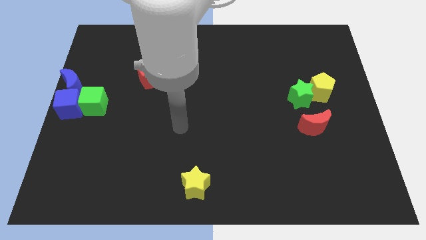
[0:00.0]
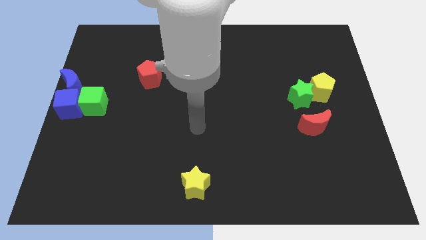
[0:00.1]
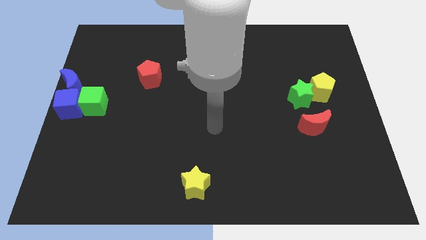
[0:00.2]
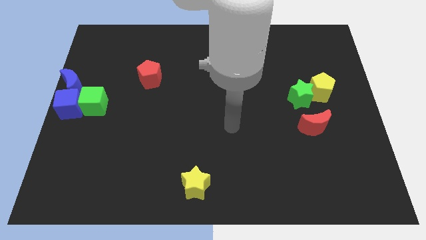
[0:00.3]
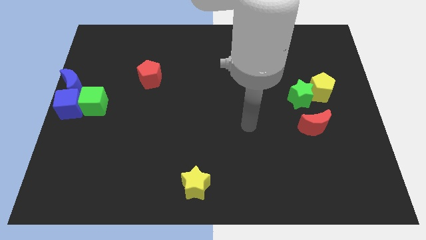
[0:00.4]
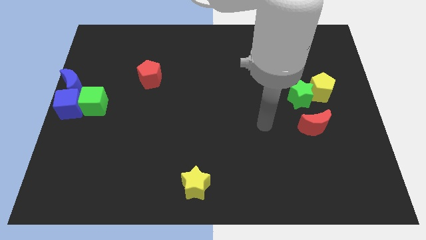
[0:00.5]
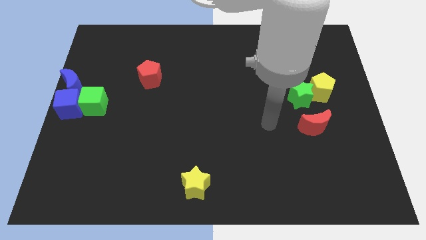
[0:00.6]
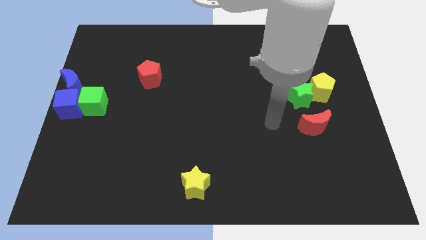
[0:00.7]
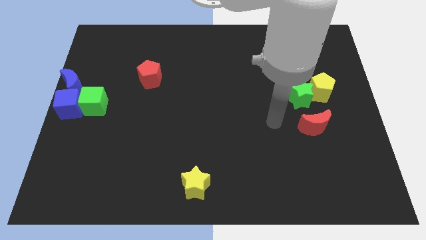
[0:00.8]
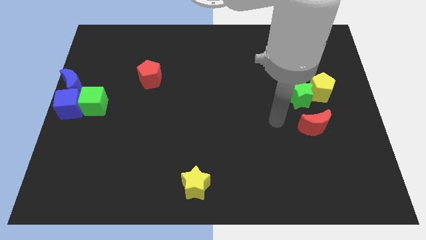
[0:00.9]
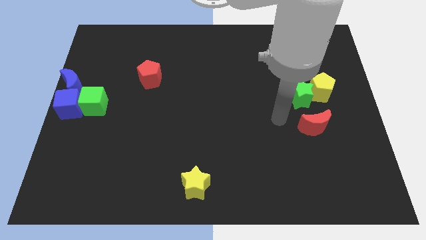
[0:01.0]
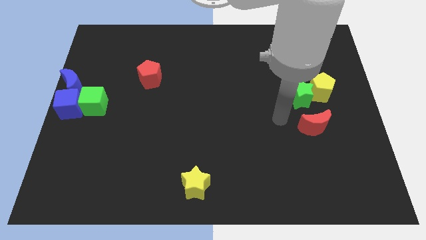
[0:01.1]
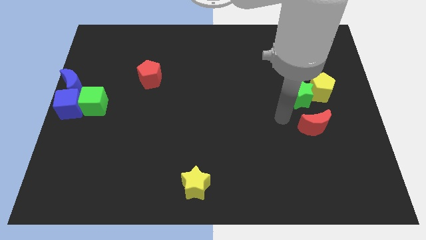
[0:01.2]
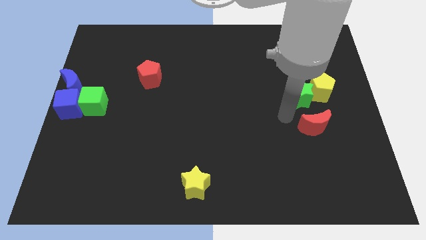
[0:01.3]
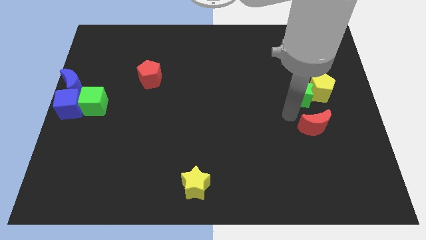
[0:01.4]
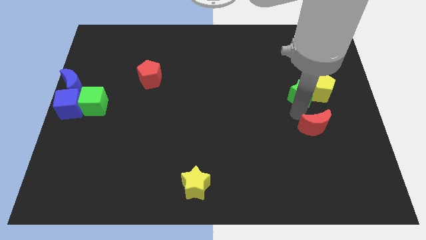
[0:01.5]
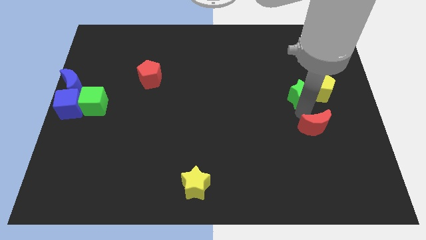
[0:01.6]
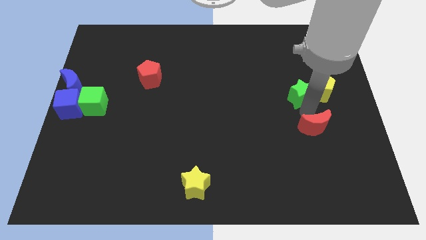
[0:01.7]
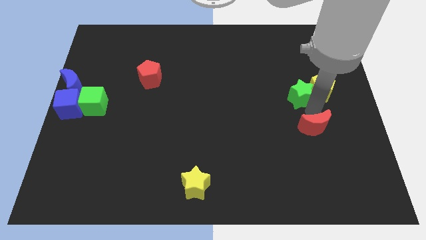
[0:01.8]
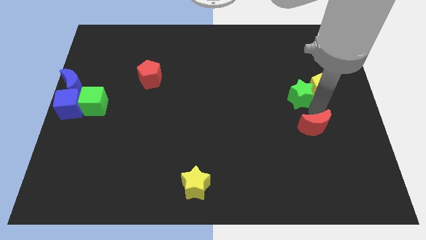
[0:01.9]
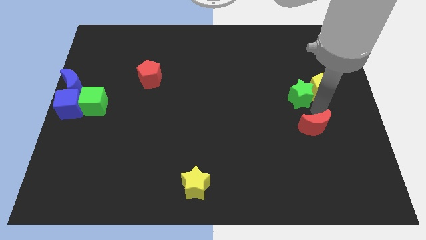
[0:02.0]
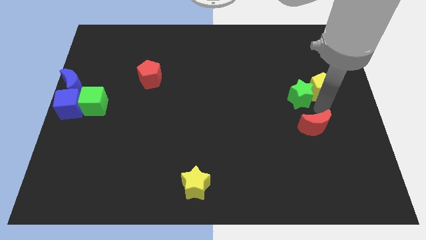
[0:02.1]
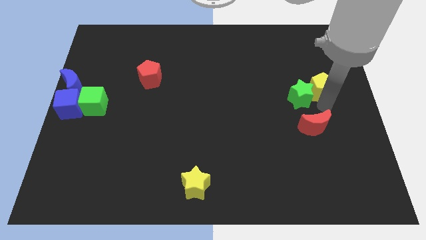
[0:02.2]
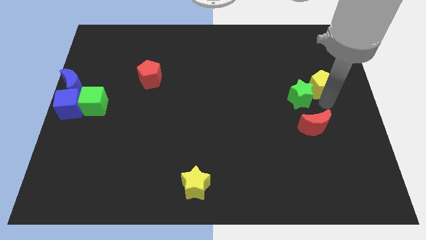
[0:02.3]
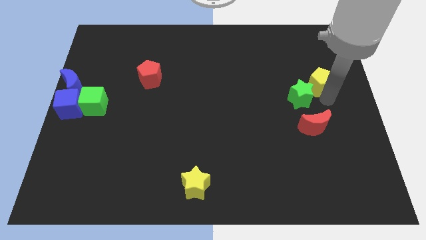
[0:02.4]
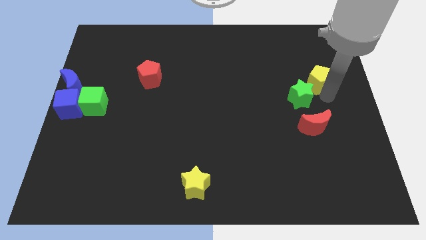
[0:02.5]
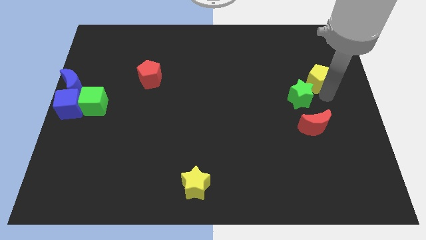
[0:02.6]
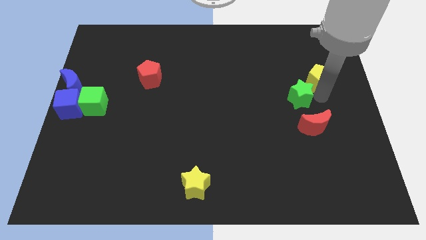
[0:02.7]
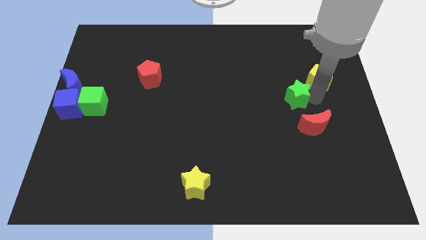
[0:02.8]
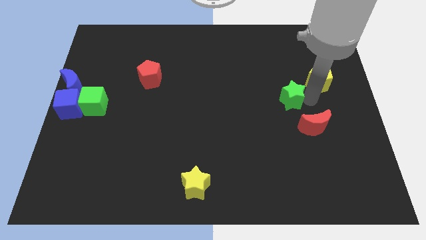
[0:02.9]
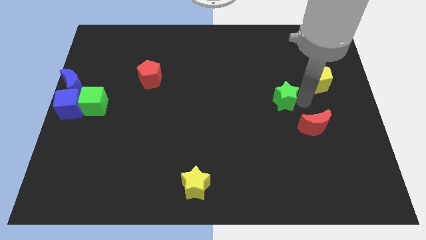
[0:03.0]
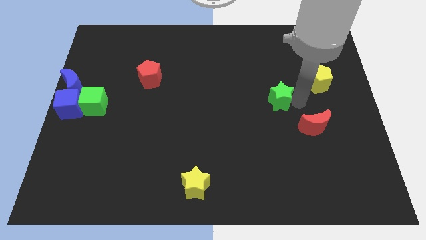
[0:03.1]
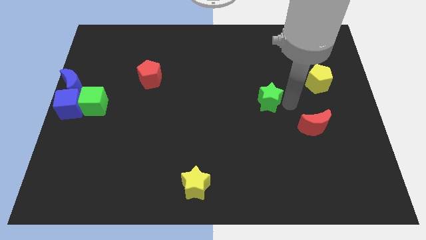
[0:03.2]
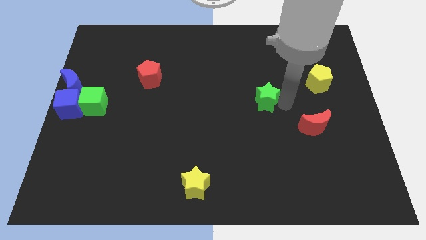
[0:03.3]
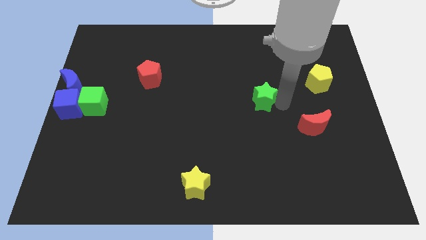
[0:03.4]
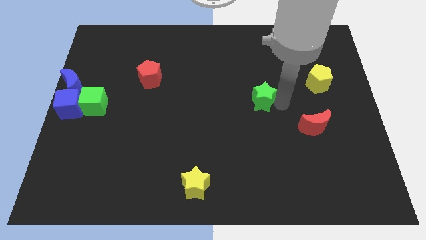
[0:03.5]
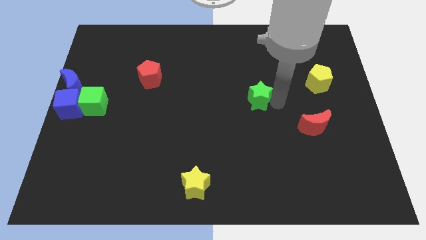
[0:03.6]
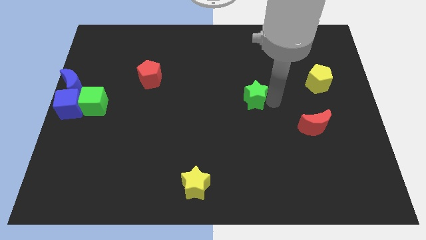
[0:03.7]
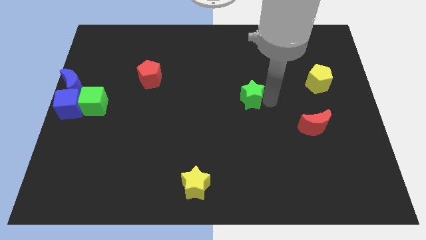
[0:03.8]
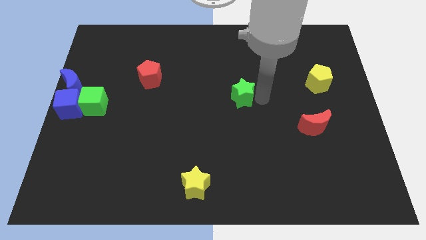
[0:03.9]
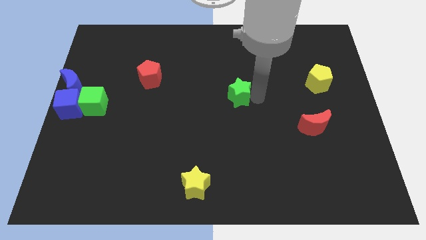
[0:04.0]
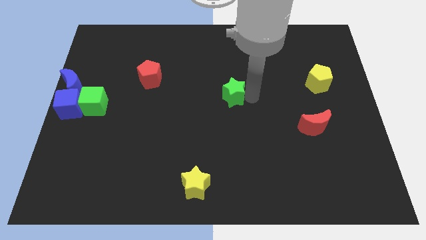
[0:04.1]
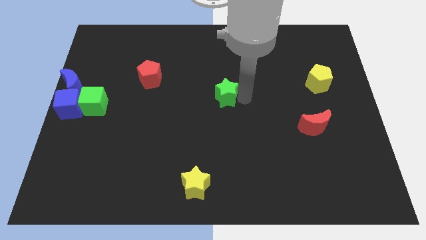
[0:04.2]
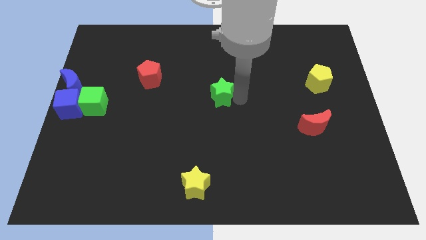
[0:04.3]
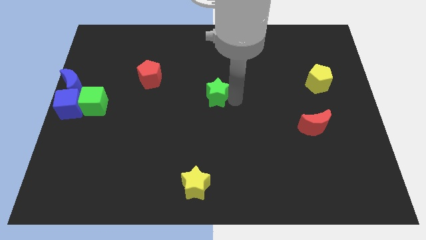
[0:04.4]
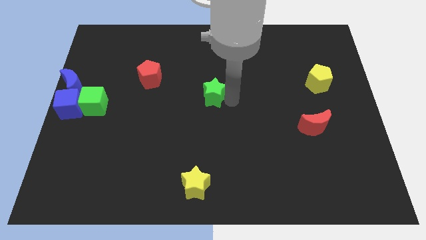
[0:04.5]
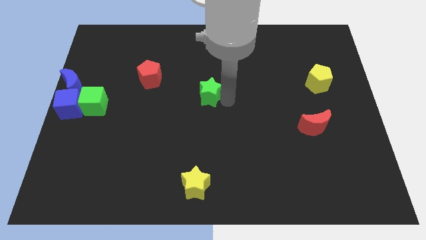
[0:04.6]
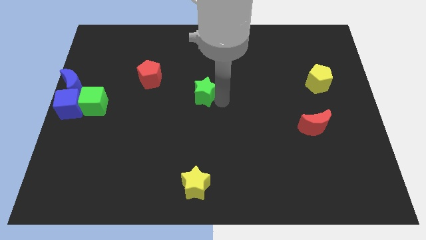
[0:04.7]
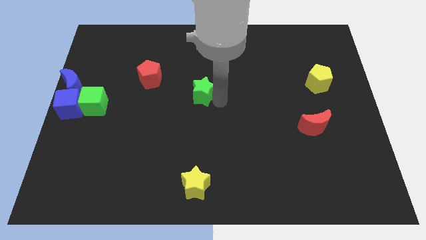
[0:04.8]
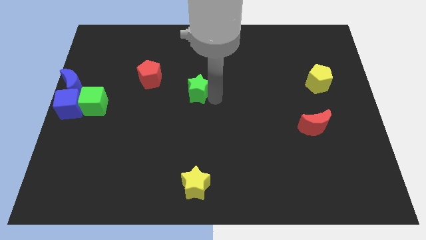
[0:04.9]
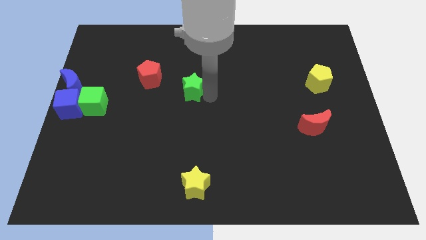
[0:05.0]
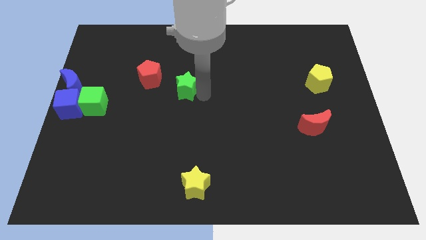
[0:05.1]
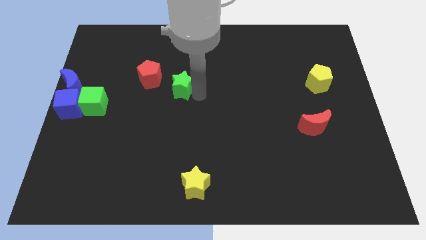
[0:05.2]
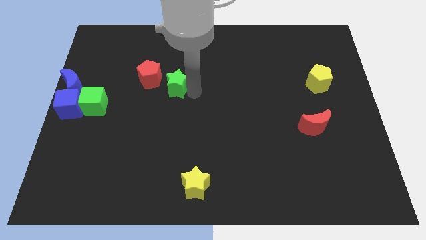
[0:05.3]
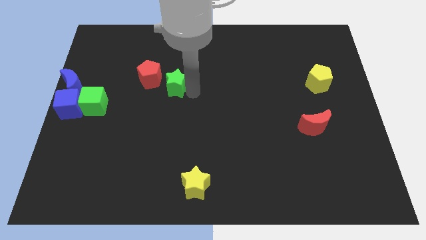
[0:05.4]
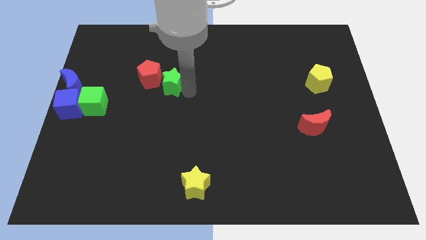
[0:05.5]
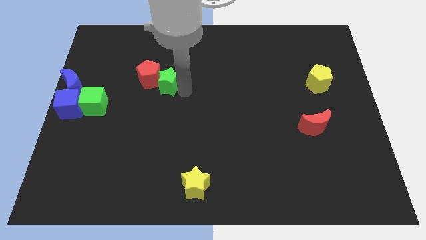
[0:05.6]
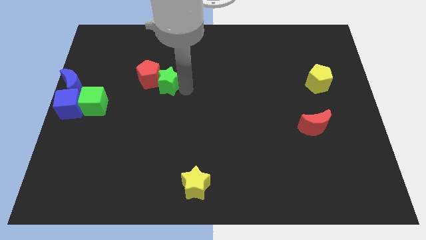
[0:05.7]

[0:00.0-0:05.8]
move green star to the bottom right of red pentagon

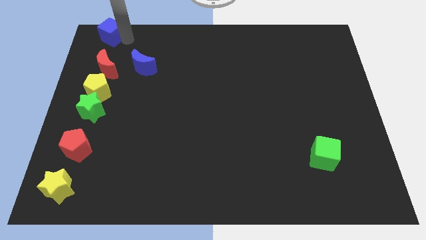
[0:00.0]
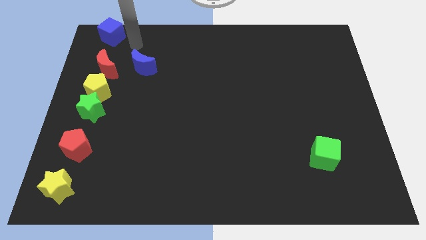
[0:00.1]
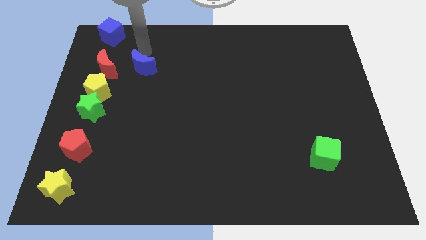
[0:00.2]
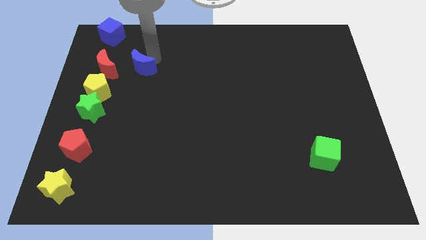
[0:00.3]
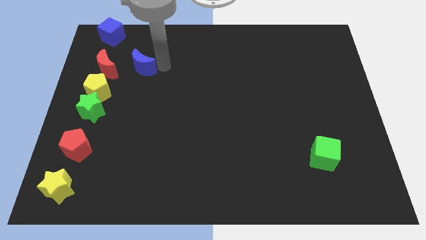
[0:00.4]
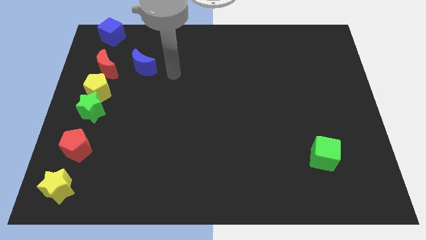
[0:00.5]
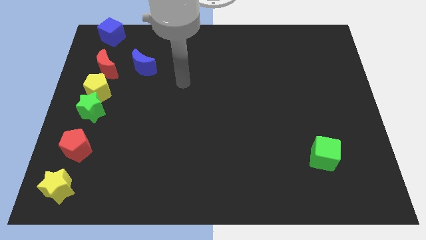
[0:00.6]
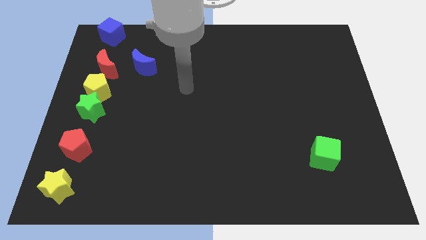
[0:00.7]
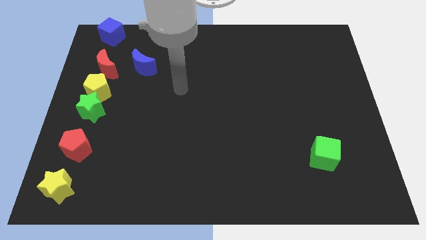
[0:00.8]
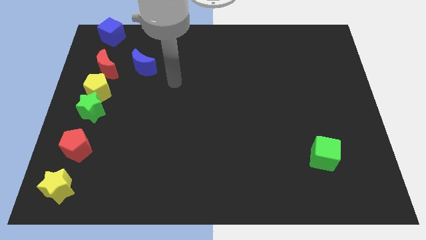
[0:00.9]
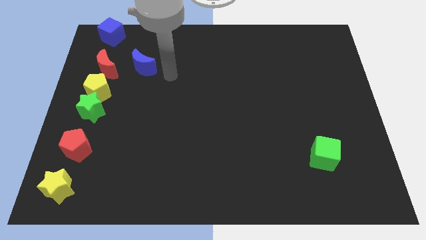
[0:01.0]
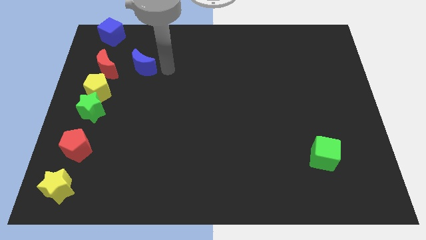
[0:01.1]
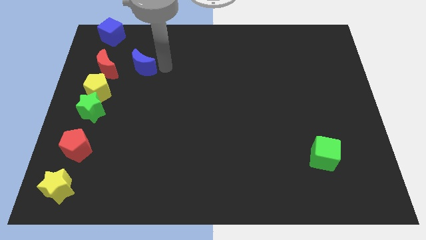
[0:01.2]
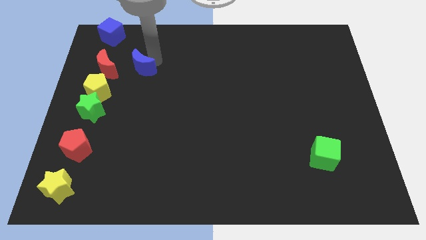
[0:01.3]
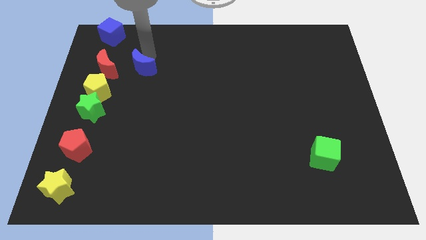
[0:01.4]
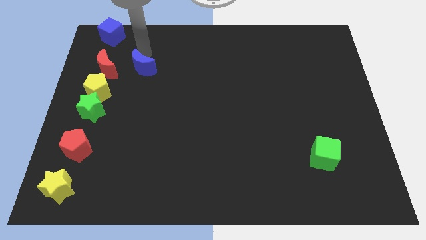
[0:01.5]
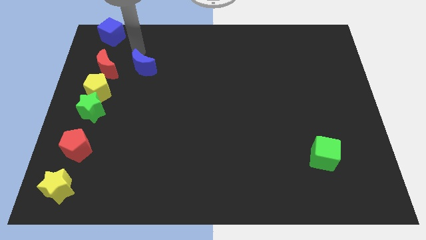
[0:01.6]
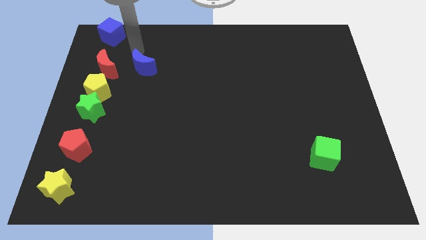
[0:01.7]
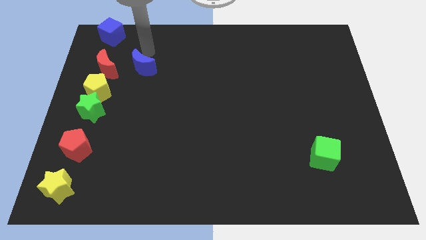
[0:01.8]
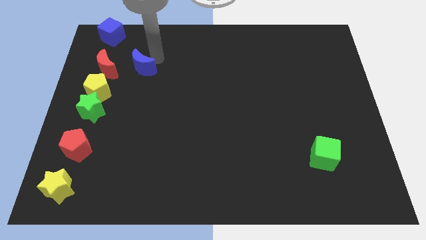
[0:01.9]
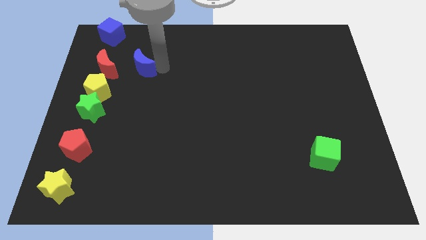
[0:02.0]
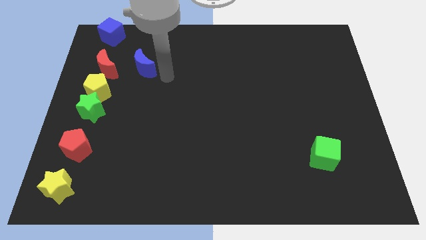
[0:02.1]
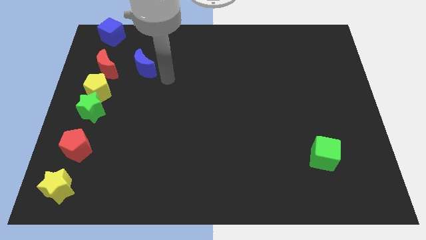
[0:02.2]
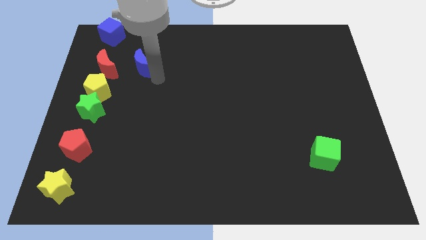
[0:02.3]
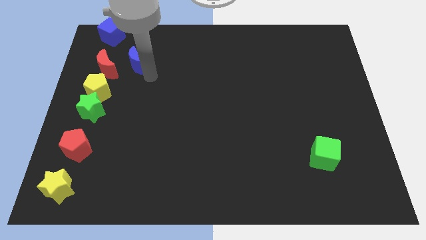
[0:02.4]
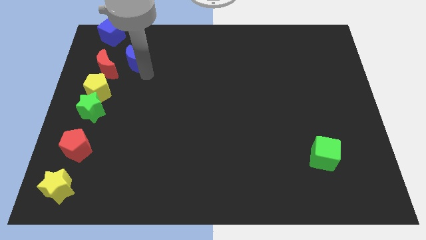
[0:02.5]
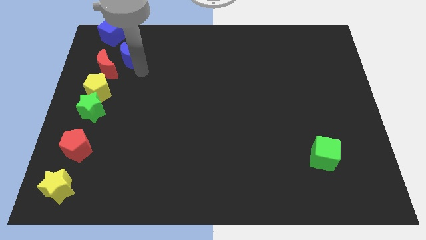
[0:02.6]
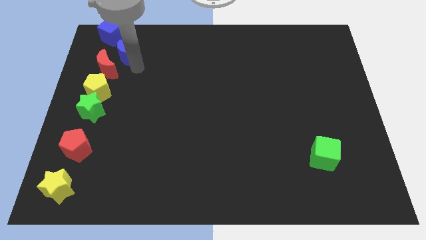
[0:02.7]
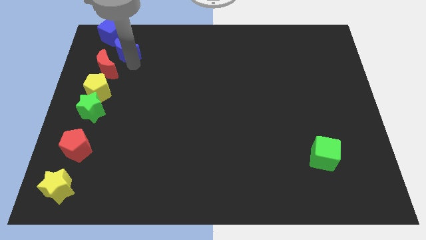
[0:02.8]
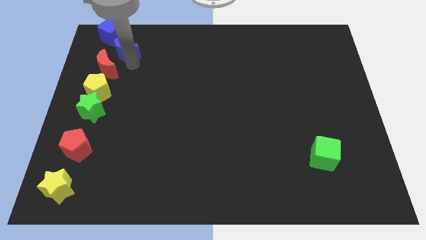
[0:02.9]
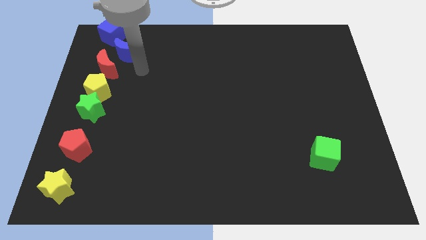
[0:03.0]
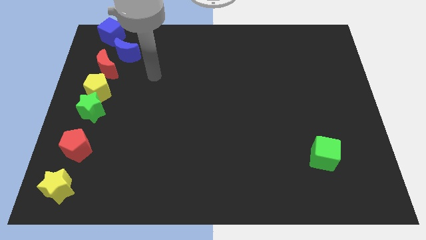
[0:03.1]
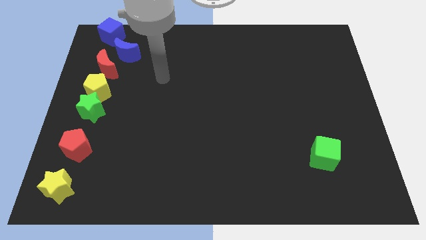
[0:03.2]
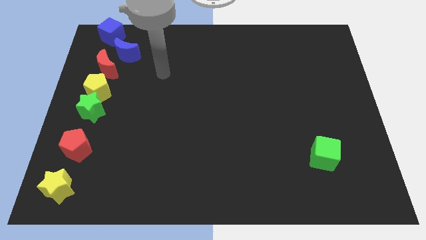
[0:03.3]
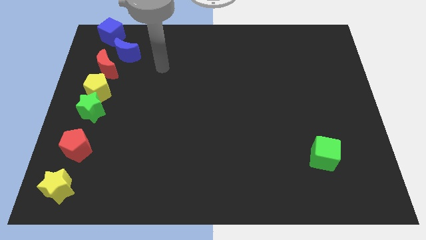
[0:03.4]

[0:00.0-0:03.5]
move the blue crescent into the blue cube
